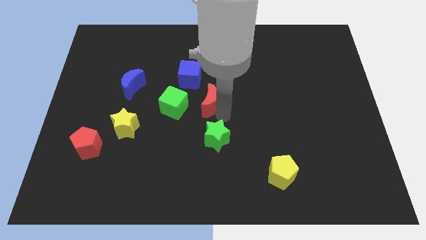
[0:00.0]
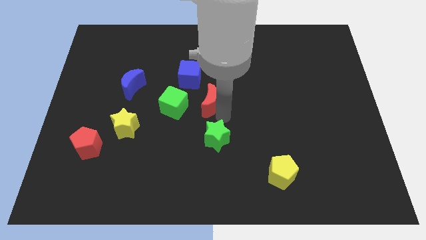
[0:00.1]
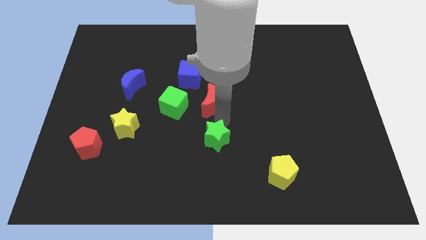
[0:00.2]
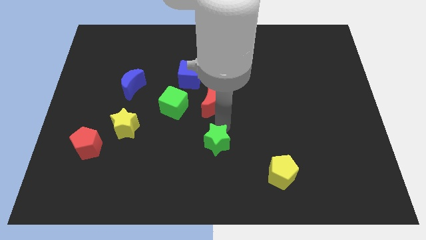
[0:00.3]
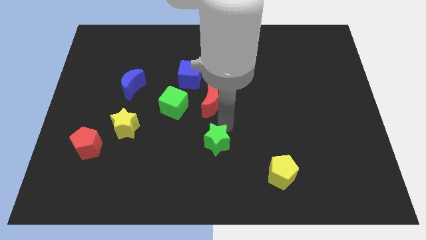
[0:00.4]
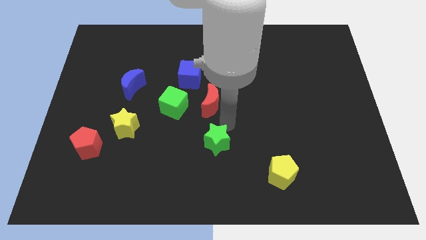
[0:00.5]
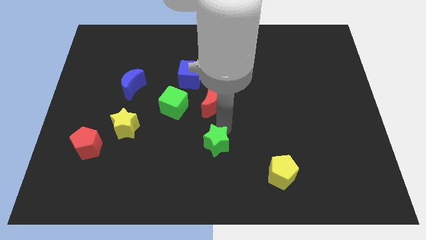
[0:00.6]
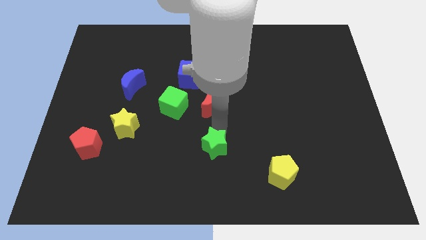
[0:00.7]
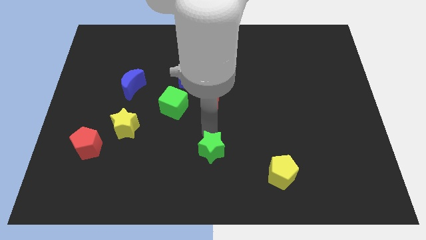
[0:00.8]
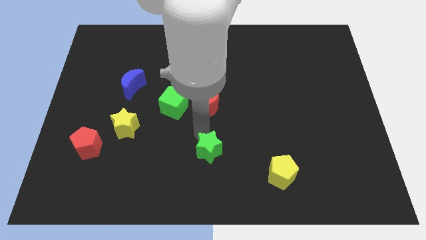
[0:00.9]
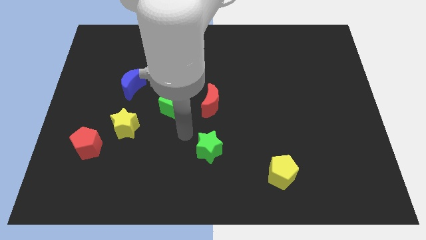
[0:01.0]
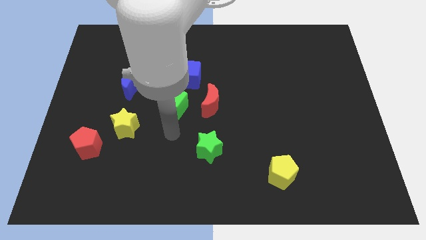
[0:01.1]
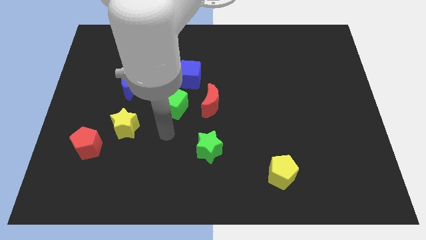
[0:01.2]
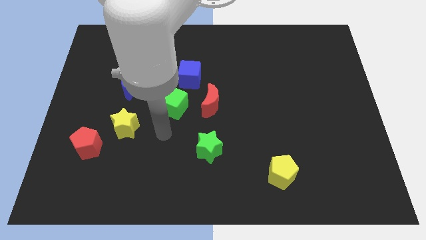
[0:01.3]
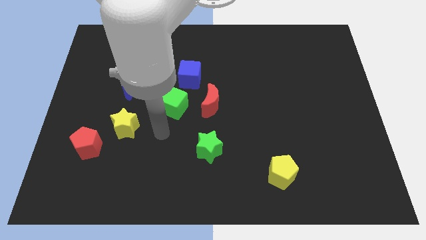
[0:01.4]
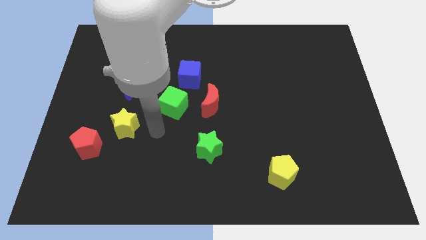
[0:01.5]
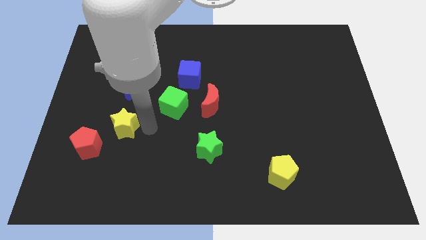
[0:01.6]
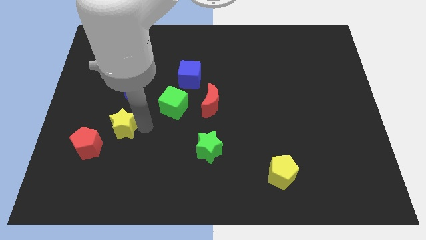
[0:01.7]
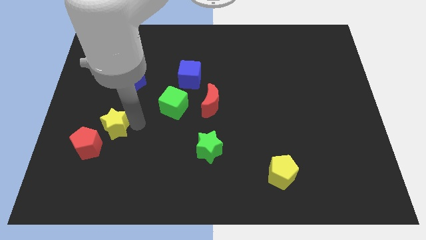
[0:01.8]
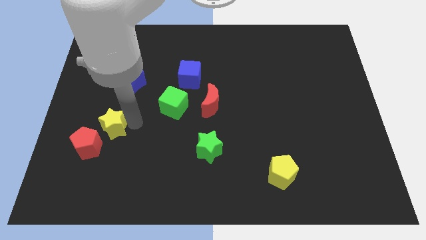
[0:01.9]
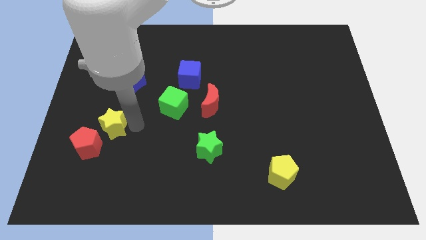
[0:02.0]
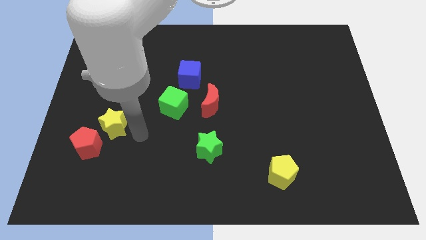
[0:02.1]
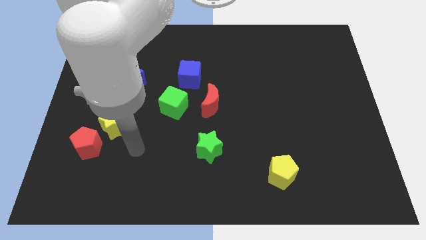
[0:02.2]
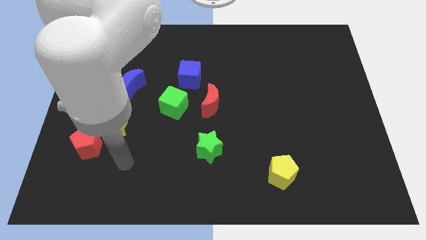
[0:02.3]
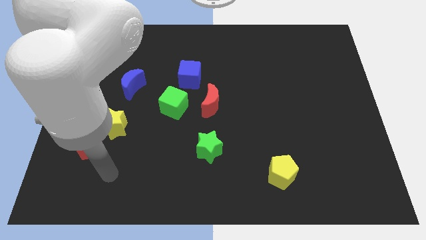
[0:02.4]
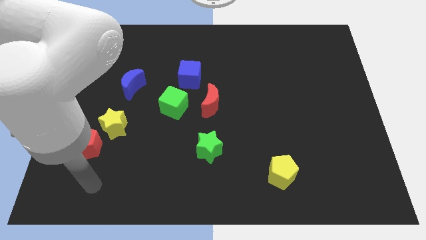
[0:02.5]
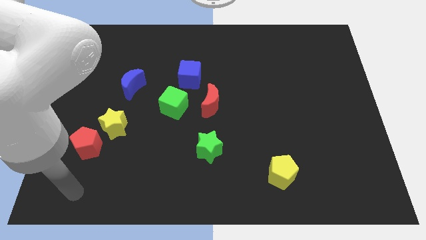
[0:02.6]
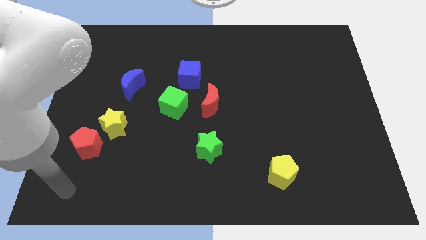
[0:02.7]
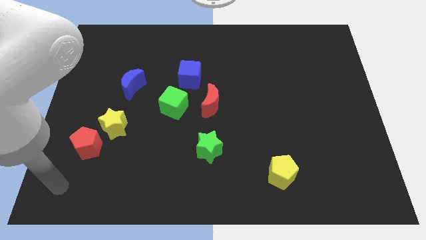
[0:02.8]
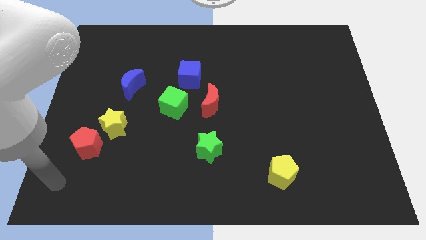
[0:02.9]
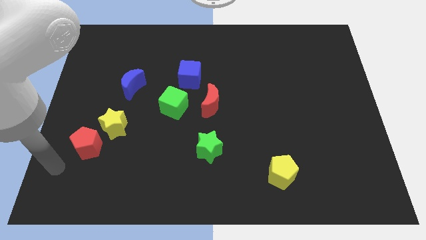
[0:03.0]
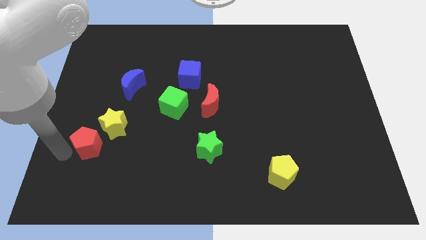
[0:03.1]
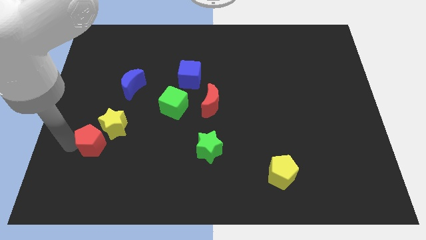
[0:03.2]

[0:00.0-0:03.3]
slightly move the green star to the bottom side

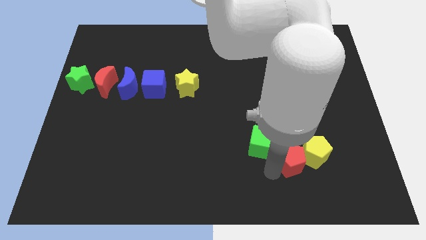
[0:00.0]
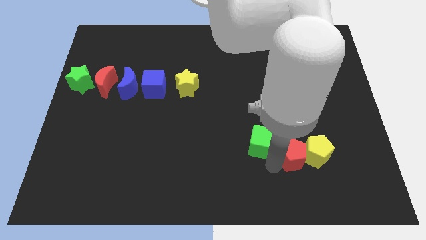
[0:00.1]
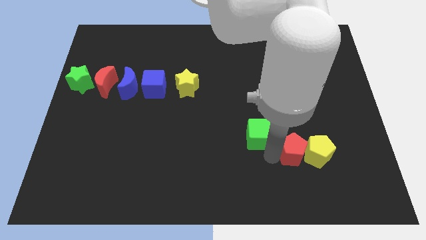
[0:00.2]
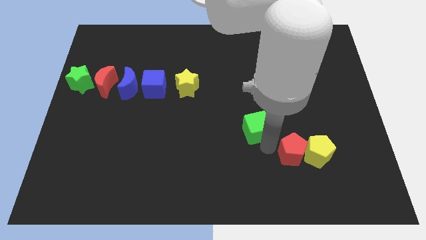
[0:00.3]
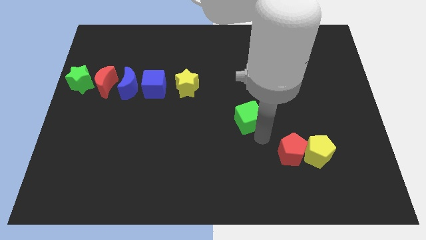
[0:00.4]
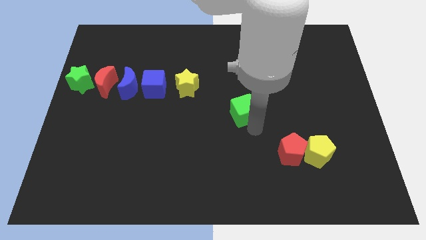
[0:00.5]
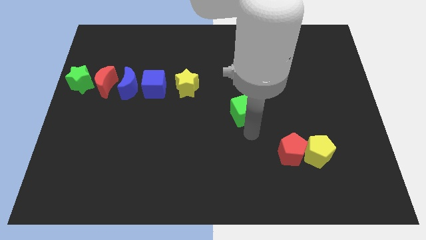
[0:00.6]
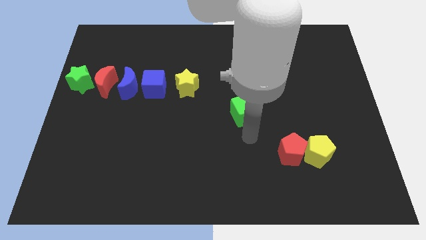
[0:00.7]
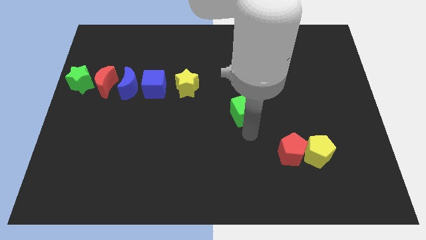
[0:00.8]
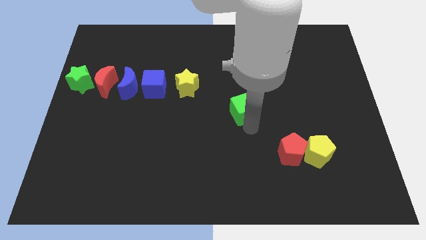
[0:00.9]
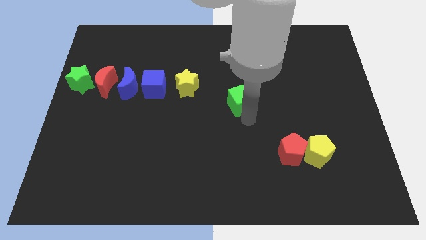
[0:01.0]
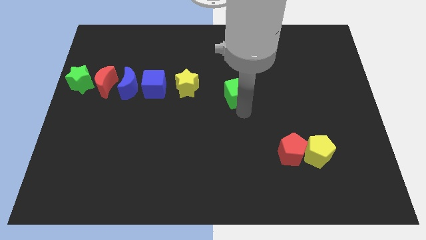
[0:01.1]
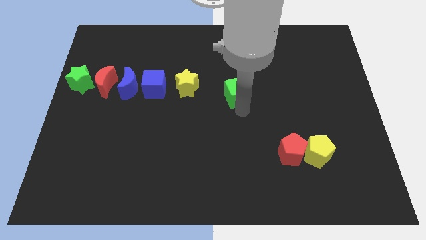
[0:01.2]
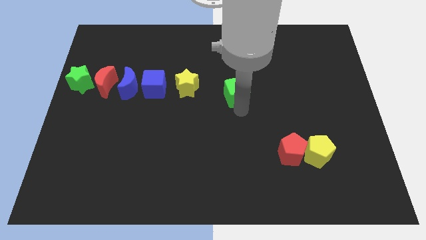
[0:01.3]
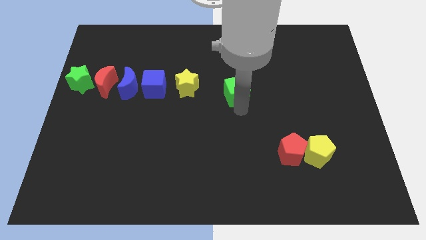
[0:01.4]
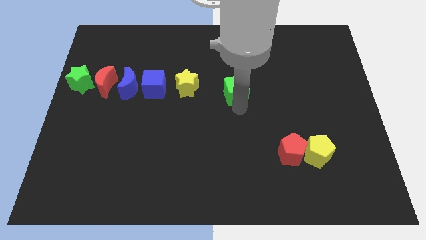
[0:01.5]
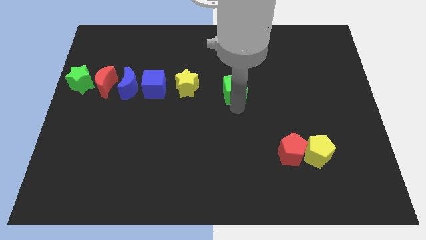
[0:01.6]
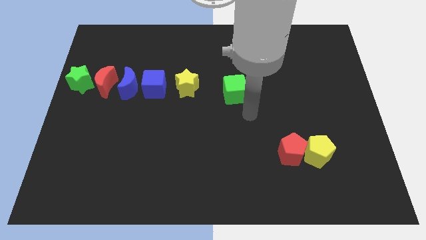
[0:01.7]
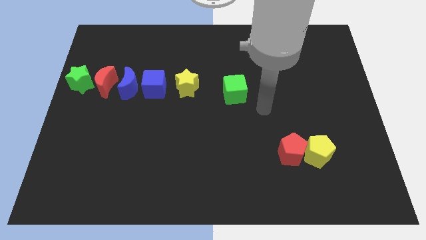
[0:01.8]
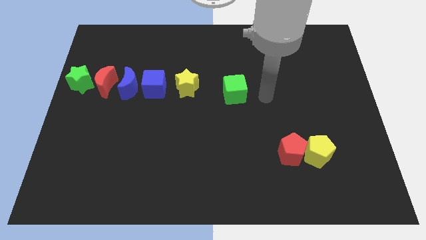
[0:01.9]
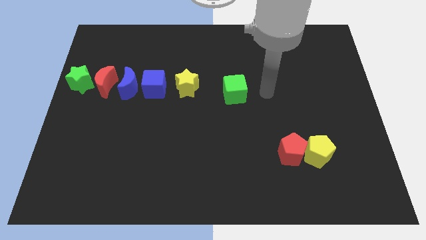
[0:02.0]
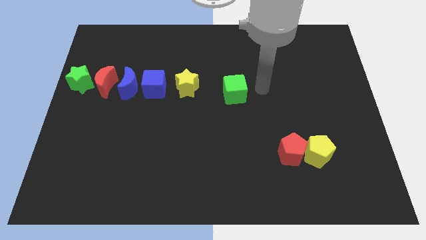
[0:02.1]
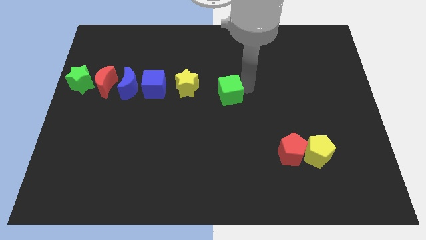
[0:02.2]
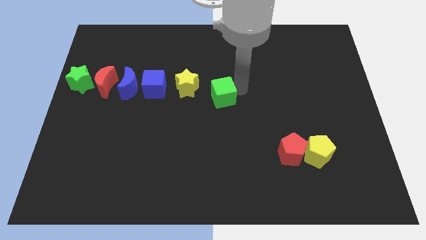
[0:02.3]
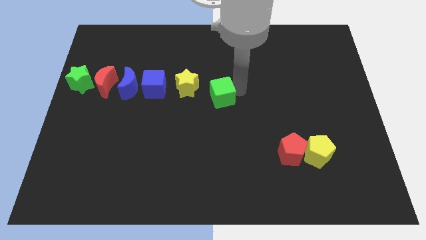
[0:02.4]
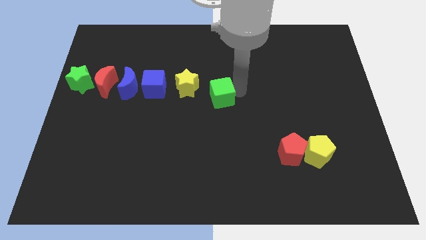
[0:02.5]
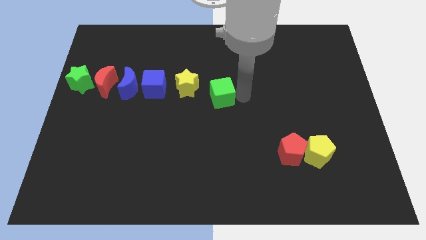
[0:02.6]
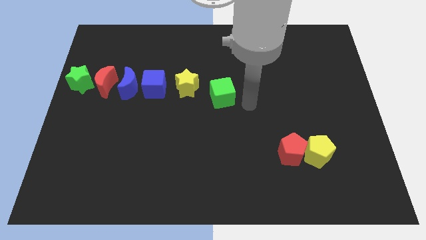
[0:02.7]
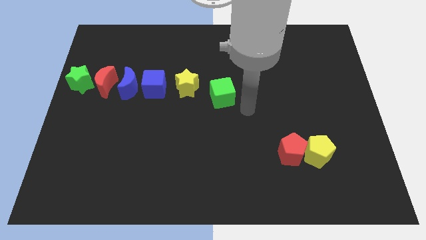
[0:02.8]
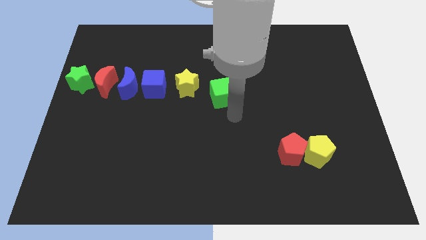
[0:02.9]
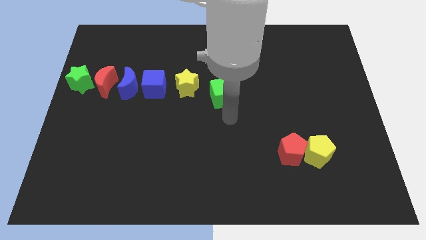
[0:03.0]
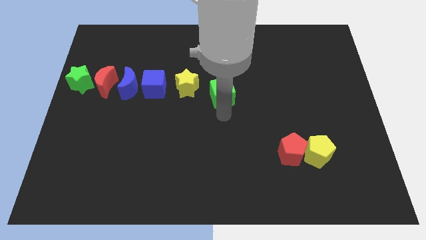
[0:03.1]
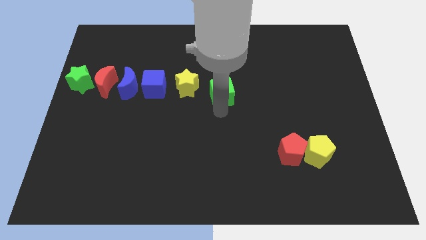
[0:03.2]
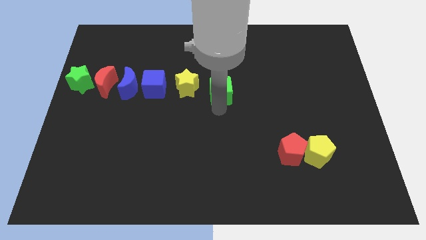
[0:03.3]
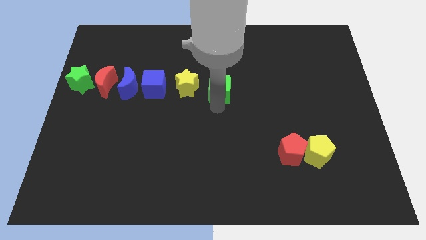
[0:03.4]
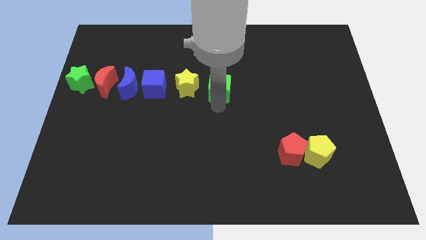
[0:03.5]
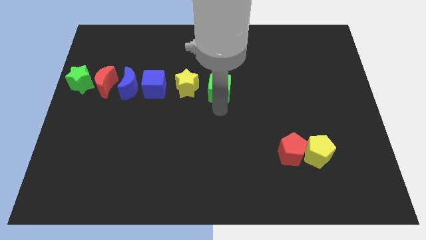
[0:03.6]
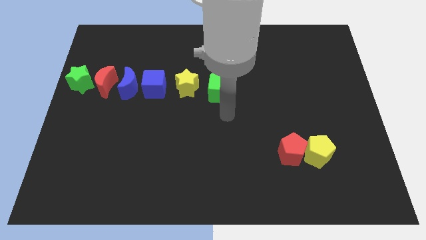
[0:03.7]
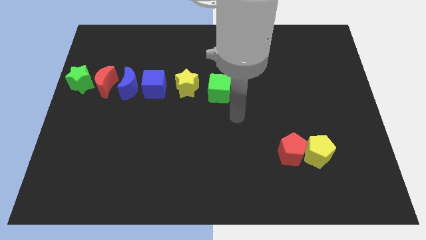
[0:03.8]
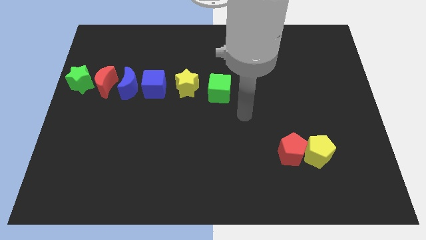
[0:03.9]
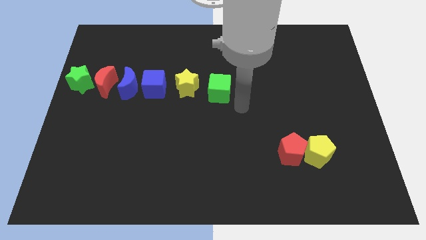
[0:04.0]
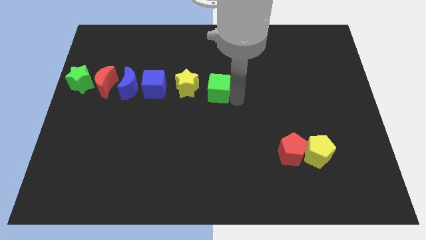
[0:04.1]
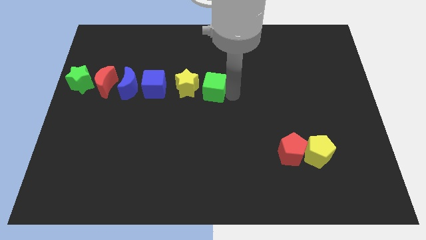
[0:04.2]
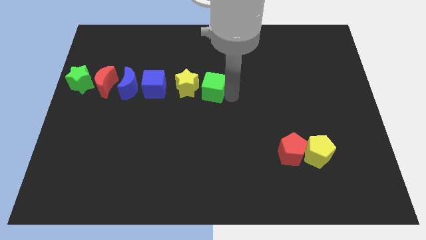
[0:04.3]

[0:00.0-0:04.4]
place a green cube on the right side of the yellow star

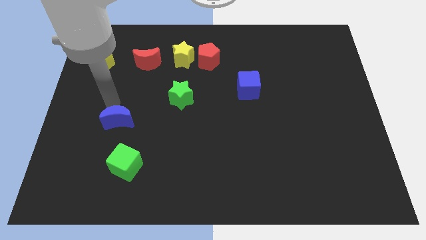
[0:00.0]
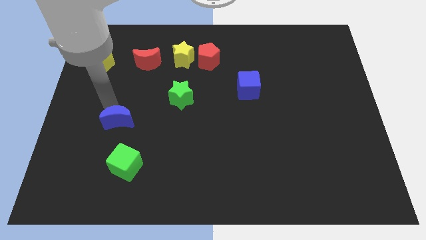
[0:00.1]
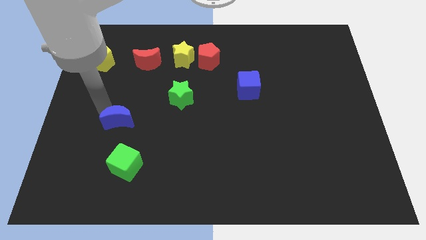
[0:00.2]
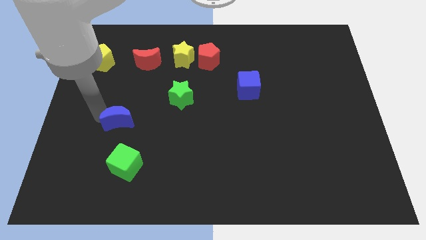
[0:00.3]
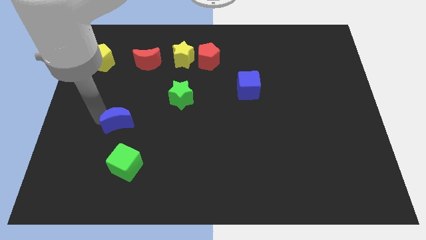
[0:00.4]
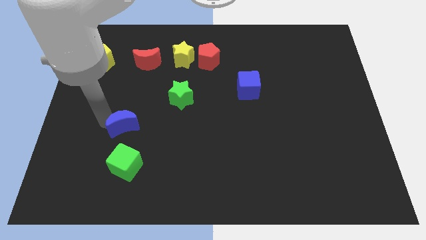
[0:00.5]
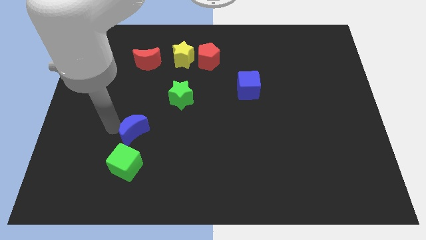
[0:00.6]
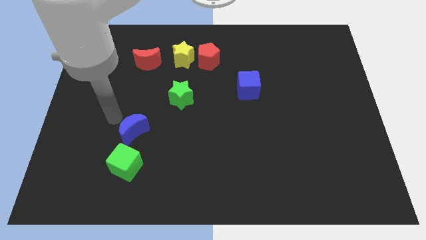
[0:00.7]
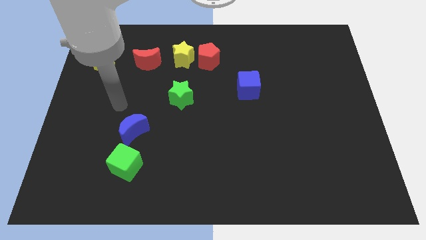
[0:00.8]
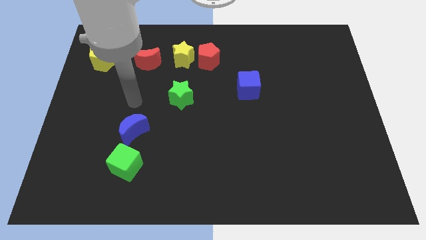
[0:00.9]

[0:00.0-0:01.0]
place blue moon above green cube

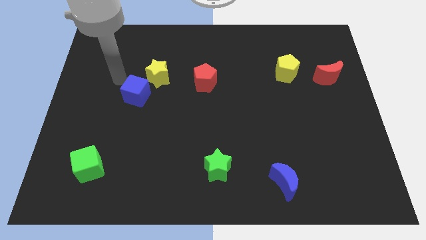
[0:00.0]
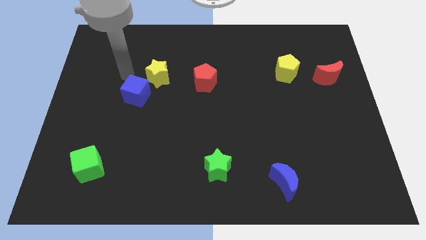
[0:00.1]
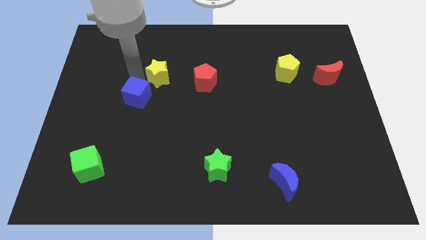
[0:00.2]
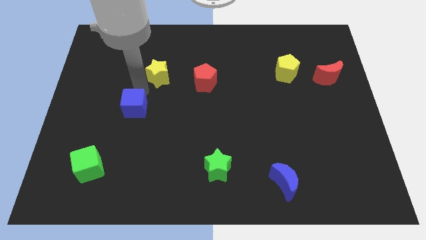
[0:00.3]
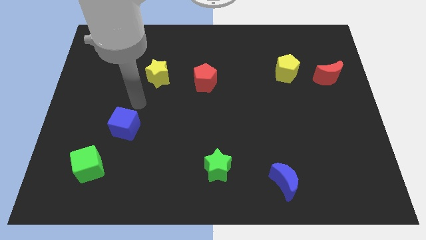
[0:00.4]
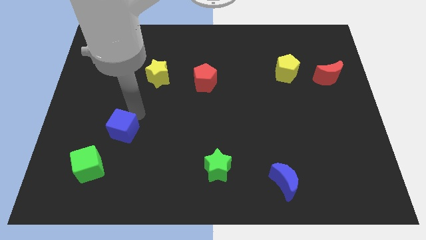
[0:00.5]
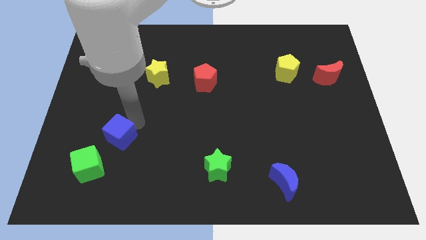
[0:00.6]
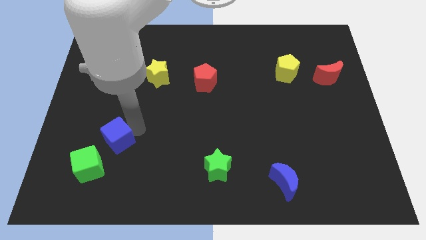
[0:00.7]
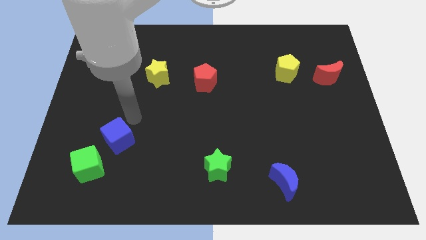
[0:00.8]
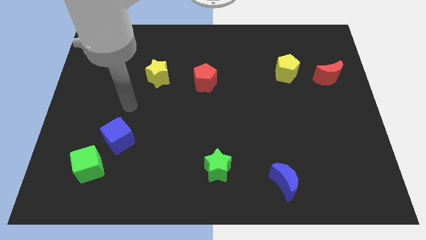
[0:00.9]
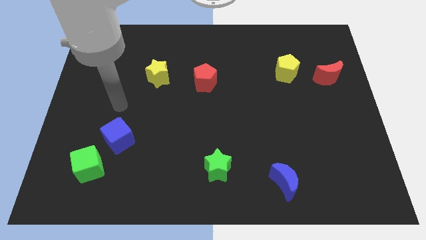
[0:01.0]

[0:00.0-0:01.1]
put the blue cube at the top right side of green cube
